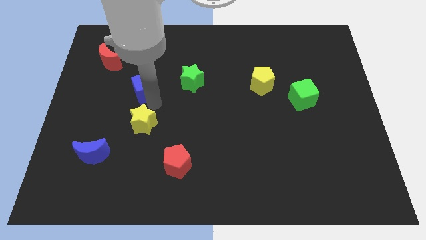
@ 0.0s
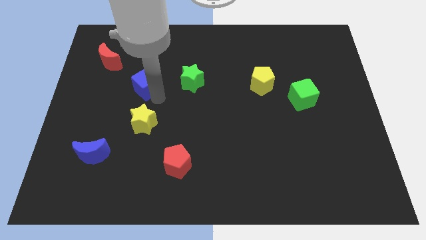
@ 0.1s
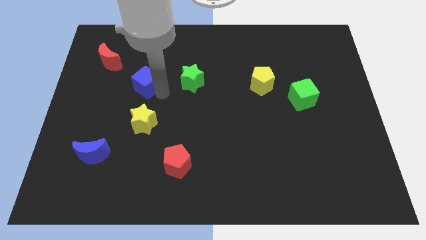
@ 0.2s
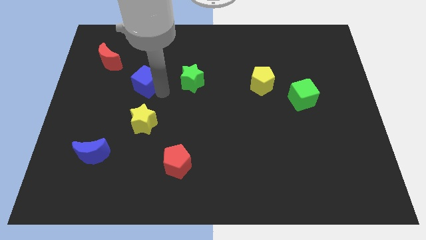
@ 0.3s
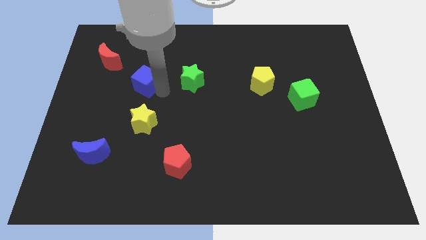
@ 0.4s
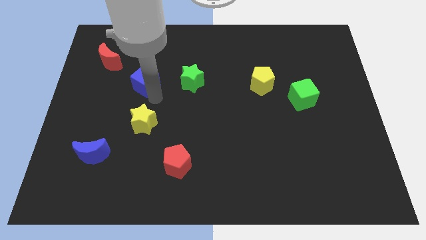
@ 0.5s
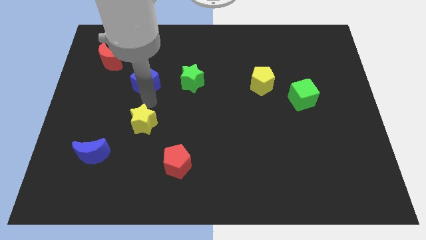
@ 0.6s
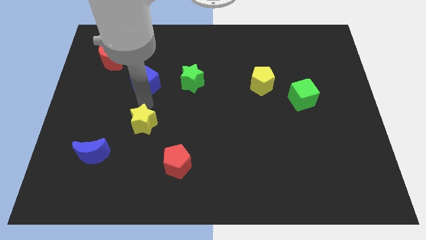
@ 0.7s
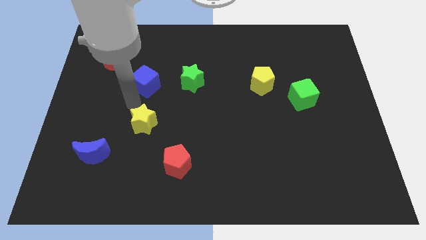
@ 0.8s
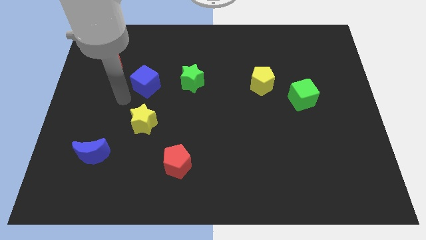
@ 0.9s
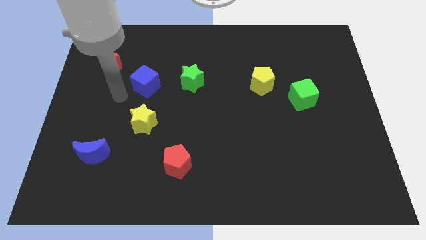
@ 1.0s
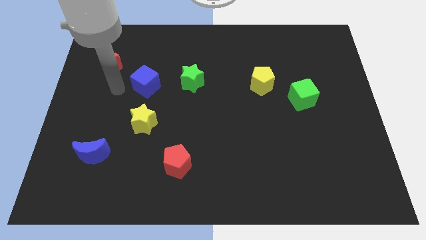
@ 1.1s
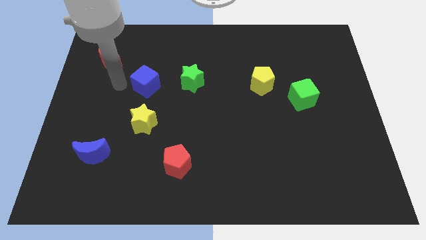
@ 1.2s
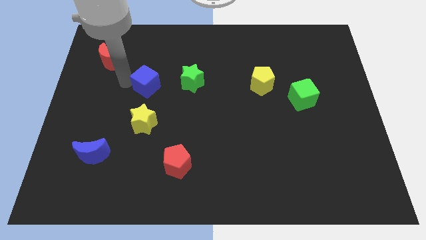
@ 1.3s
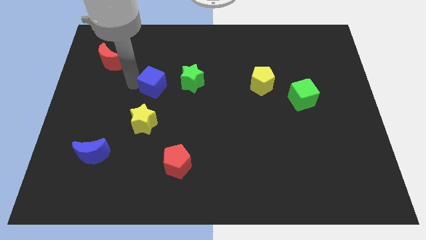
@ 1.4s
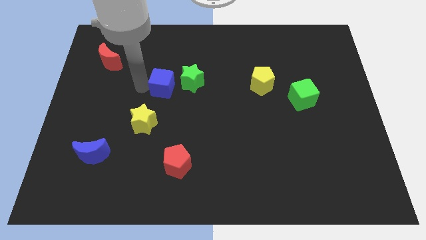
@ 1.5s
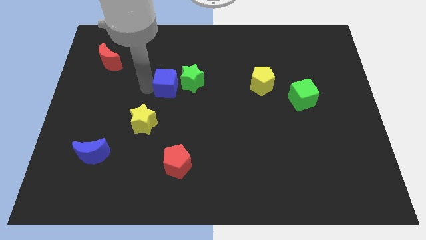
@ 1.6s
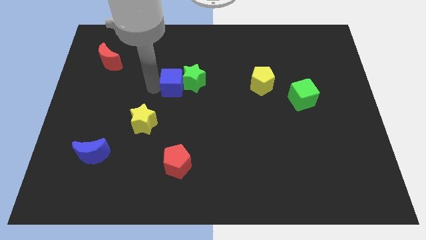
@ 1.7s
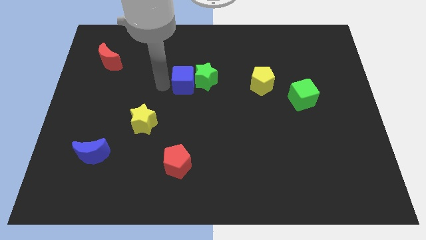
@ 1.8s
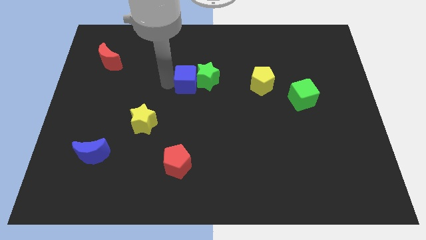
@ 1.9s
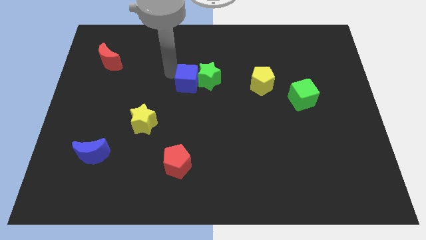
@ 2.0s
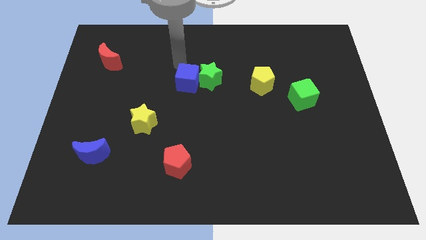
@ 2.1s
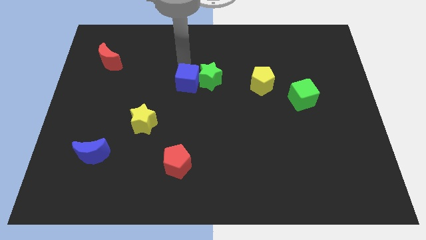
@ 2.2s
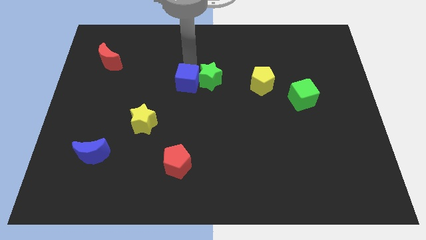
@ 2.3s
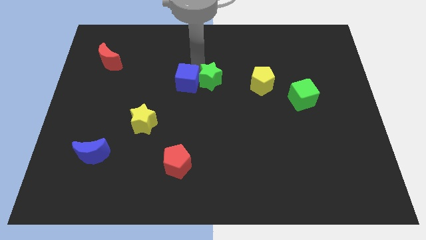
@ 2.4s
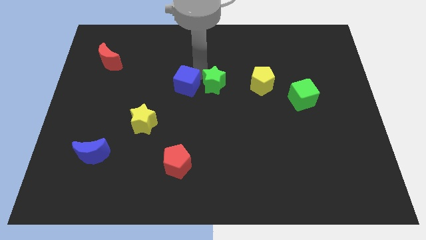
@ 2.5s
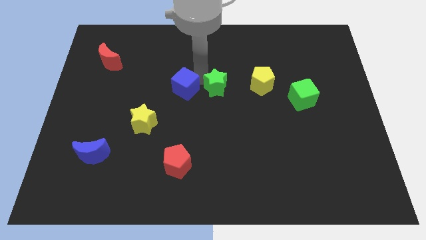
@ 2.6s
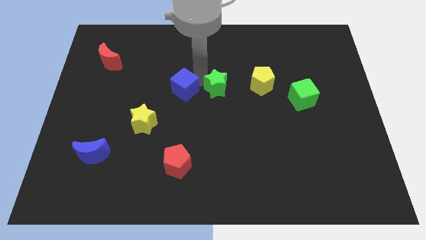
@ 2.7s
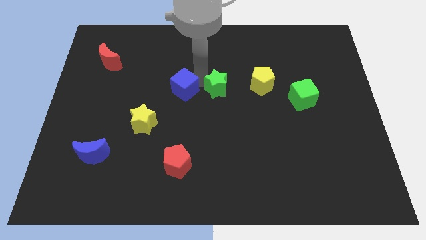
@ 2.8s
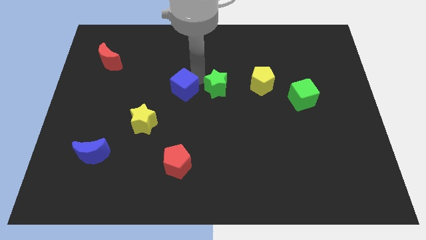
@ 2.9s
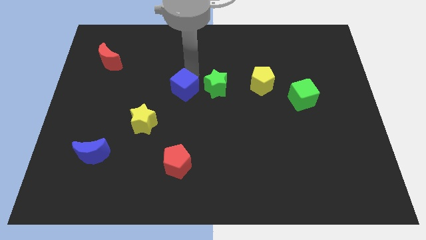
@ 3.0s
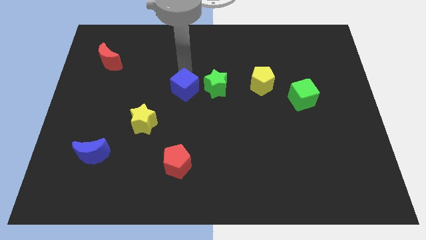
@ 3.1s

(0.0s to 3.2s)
push the blue cube to the top right of the yellow star

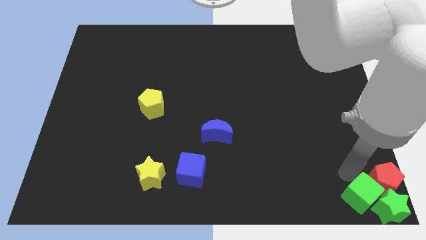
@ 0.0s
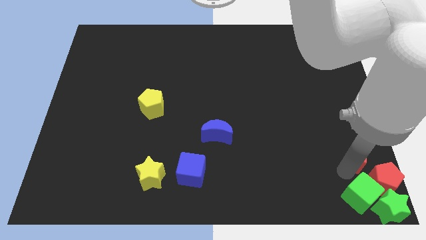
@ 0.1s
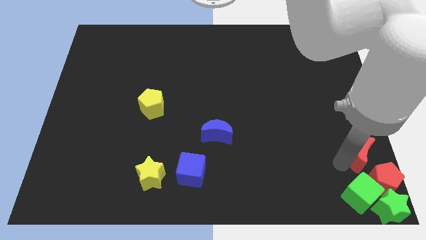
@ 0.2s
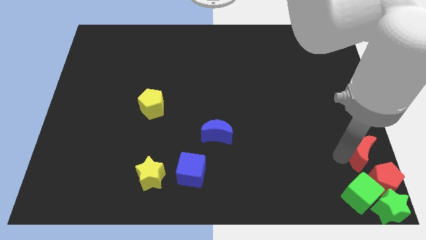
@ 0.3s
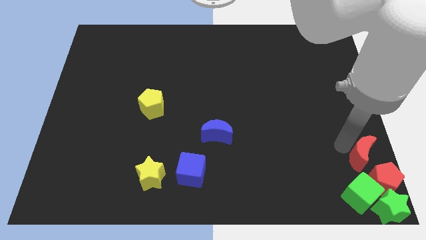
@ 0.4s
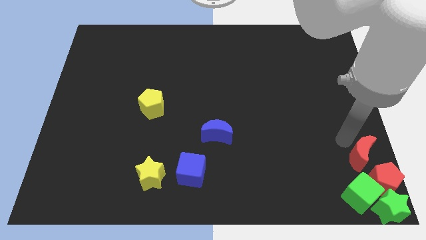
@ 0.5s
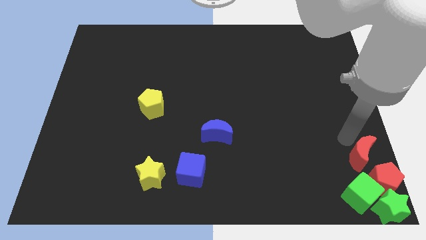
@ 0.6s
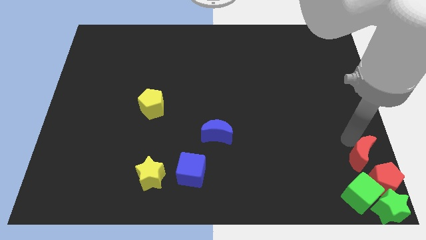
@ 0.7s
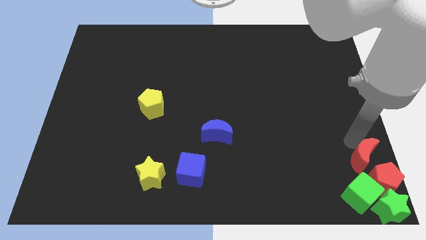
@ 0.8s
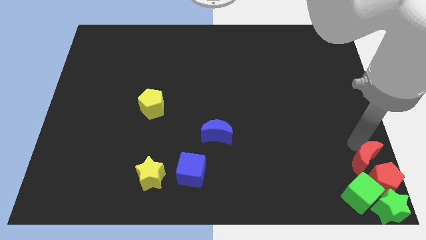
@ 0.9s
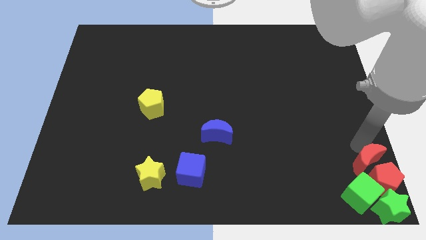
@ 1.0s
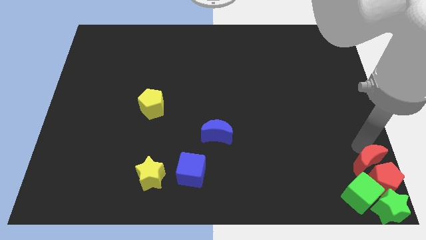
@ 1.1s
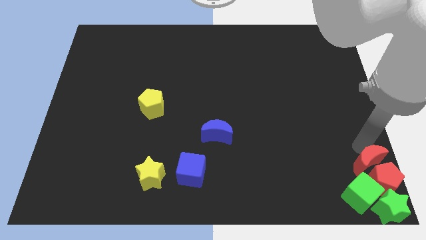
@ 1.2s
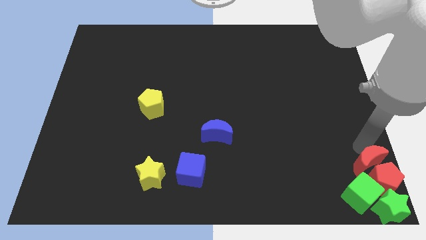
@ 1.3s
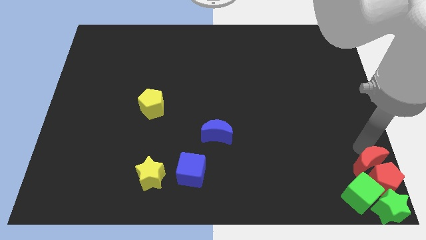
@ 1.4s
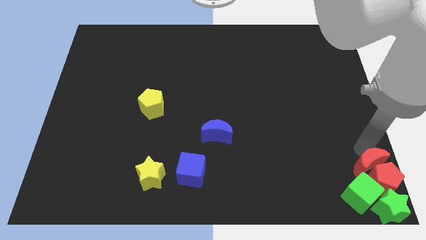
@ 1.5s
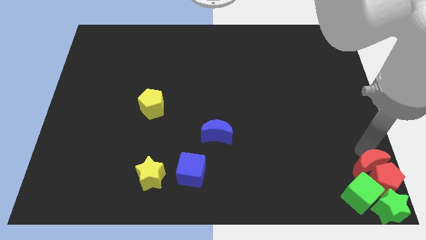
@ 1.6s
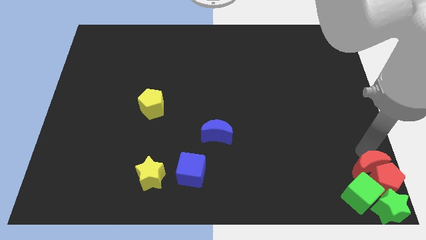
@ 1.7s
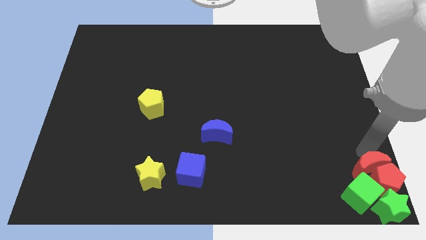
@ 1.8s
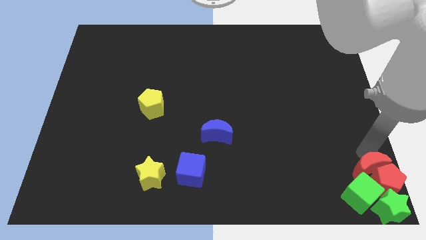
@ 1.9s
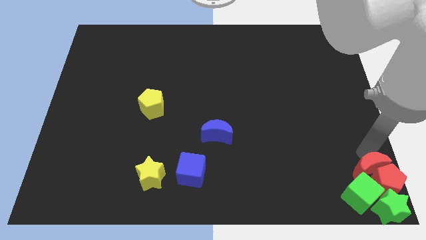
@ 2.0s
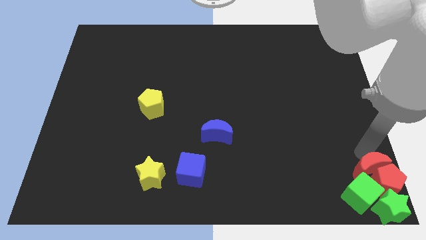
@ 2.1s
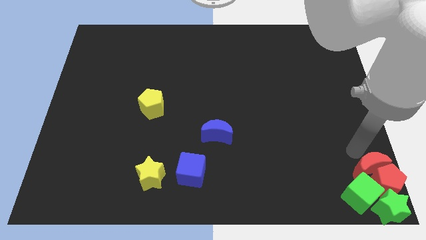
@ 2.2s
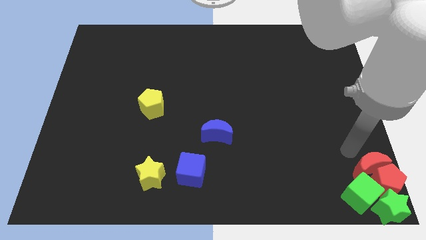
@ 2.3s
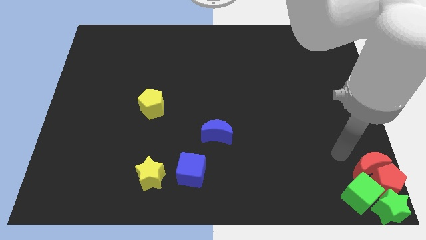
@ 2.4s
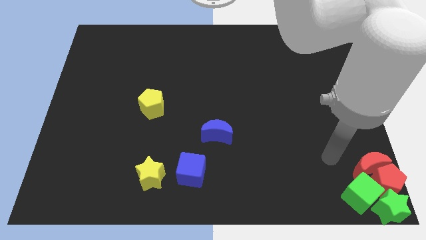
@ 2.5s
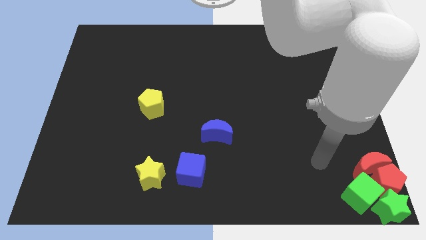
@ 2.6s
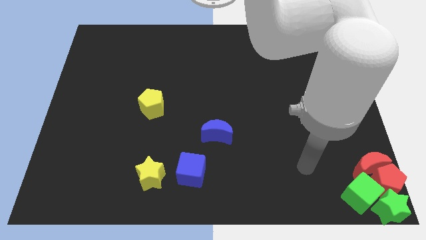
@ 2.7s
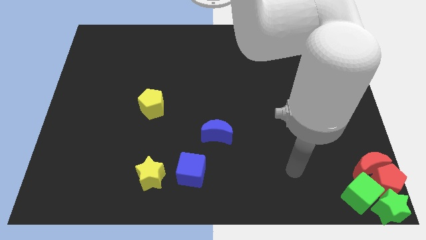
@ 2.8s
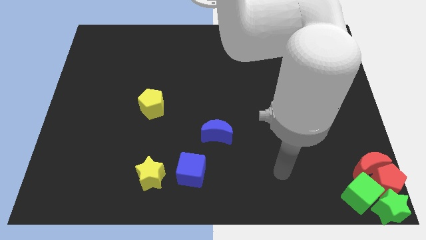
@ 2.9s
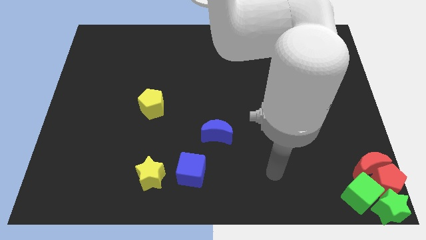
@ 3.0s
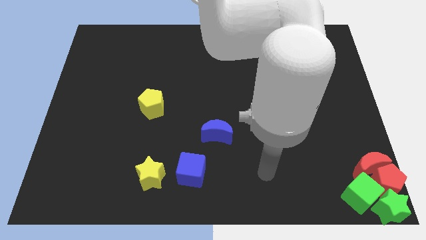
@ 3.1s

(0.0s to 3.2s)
push the red pentagon with red crescent

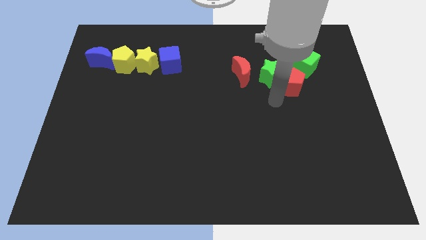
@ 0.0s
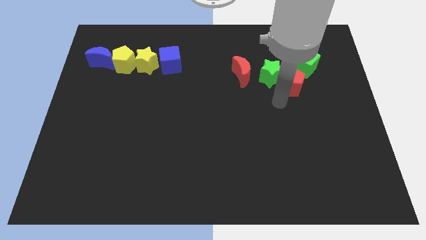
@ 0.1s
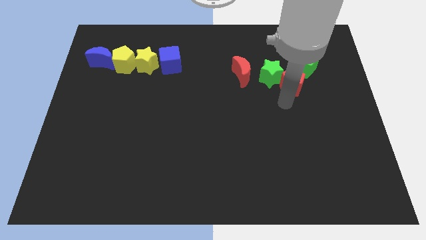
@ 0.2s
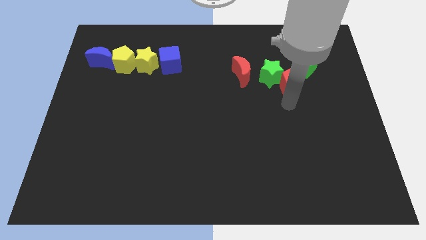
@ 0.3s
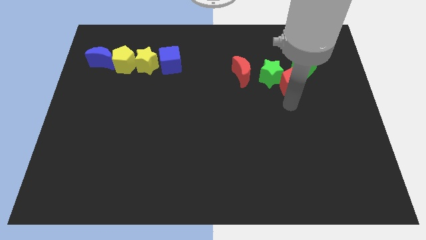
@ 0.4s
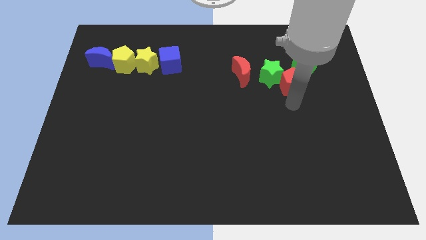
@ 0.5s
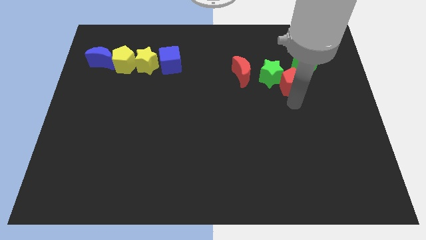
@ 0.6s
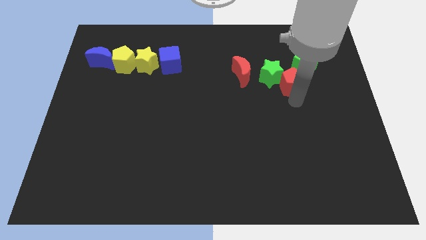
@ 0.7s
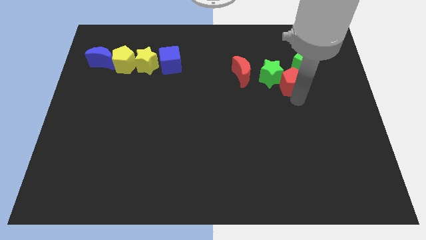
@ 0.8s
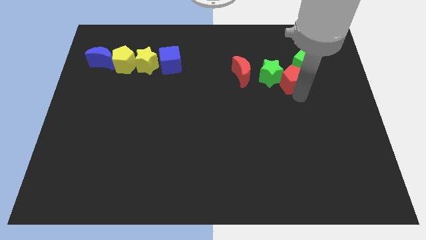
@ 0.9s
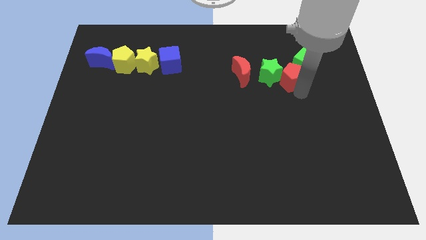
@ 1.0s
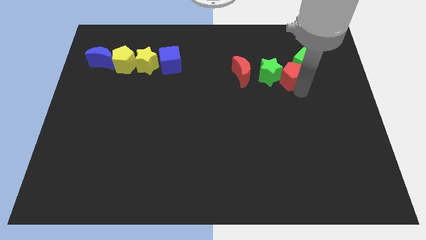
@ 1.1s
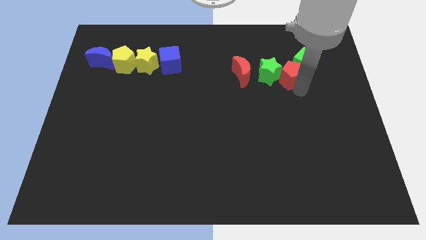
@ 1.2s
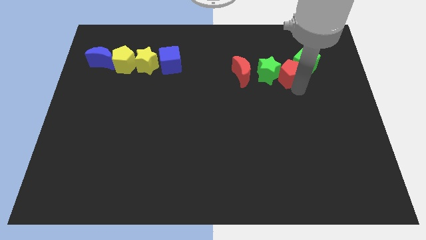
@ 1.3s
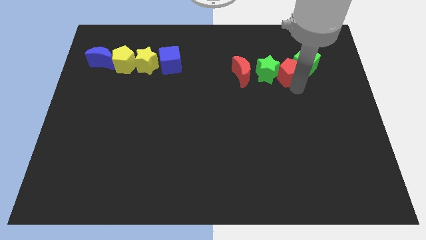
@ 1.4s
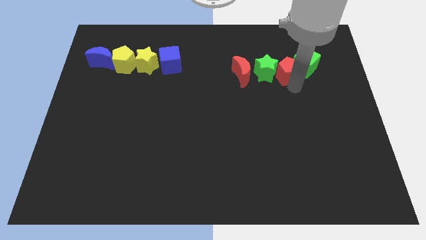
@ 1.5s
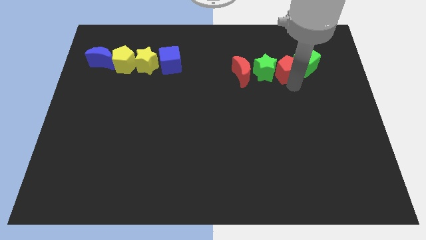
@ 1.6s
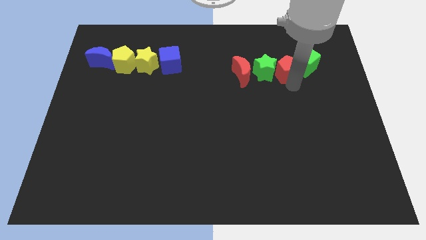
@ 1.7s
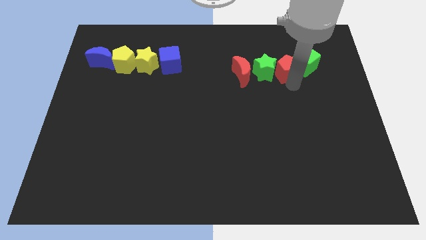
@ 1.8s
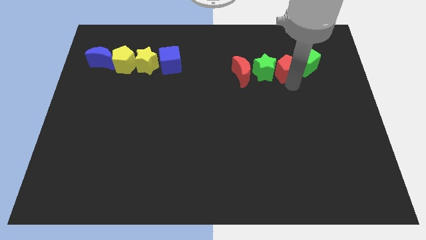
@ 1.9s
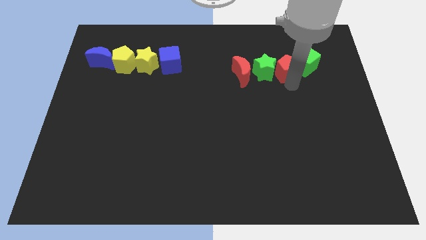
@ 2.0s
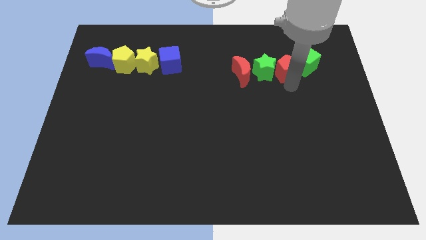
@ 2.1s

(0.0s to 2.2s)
push the red pentagon into the green cube

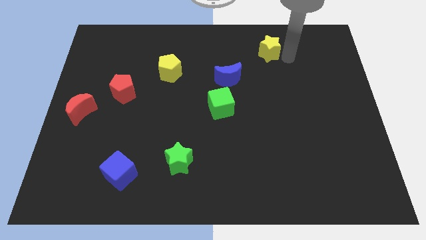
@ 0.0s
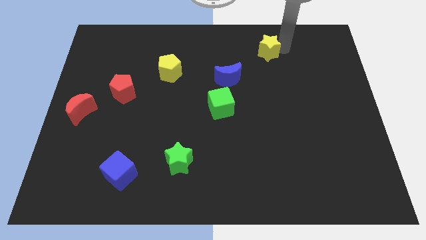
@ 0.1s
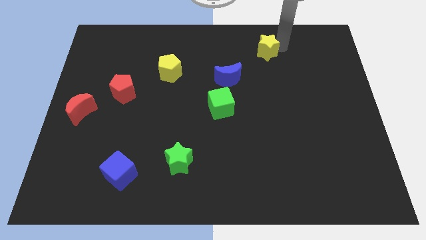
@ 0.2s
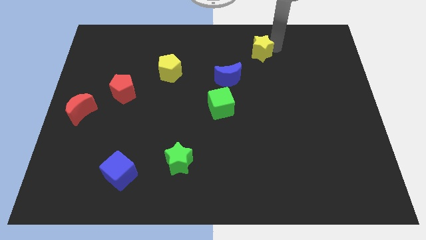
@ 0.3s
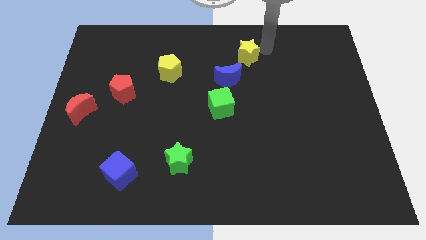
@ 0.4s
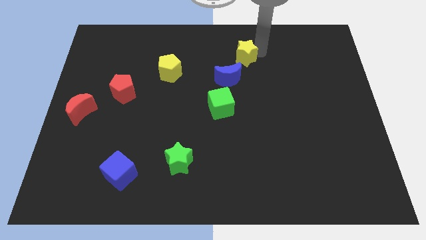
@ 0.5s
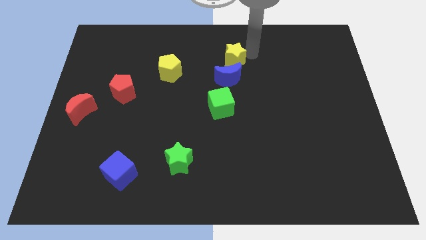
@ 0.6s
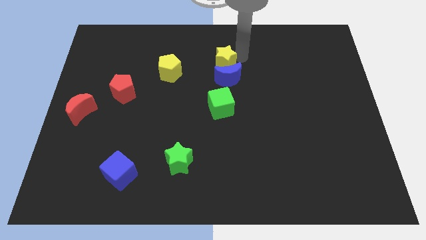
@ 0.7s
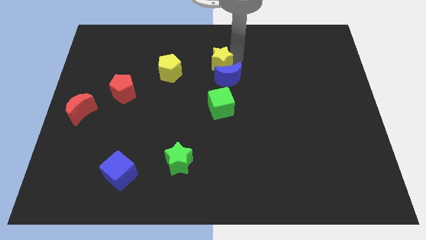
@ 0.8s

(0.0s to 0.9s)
place the yellow star above the blue crescent
